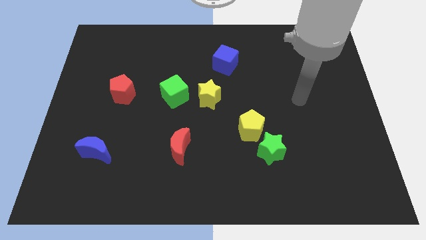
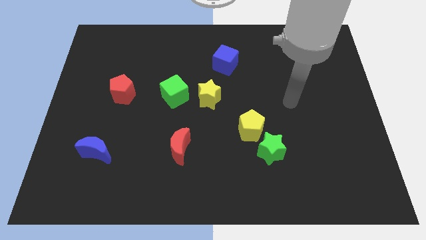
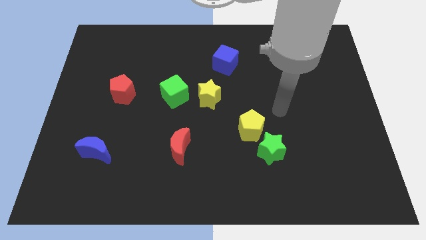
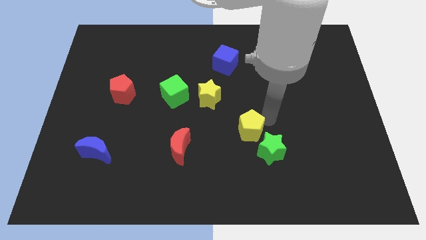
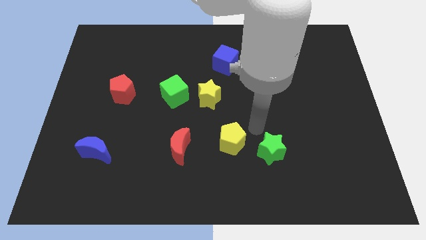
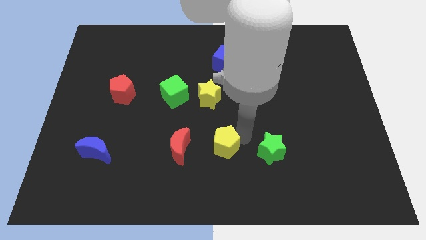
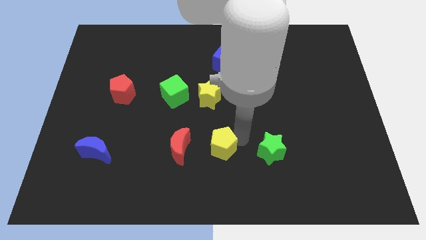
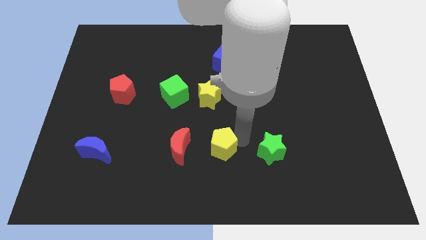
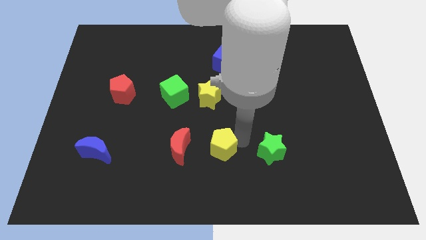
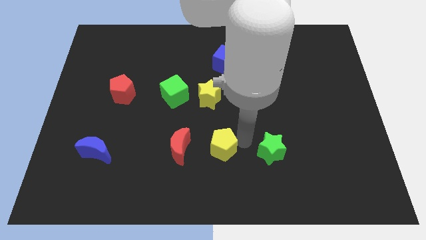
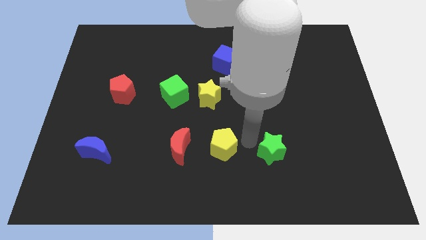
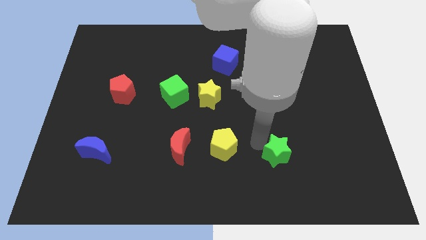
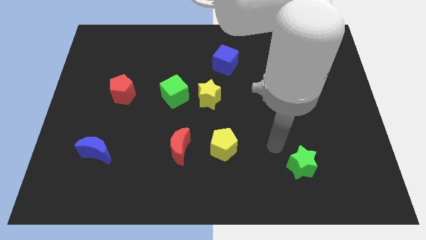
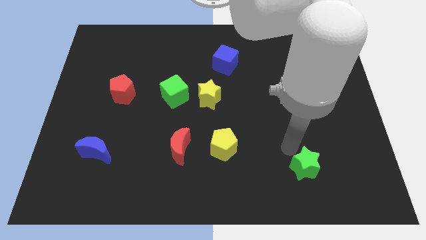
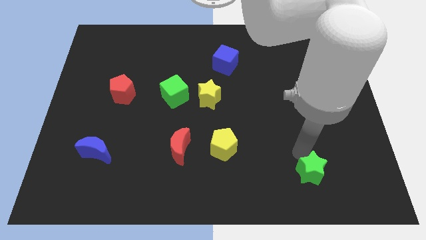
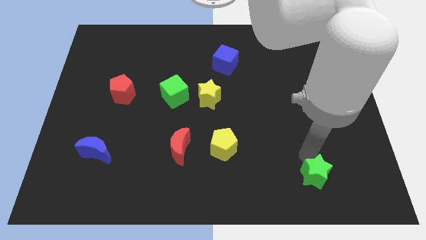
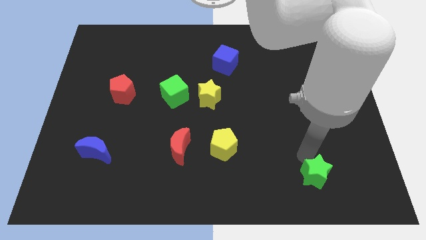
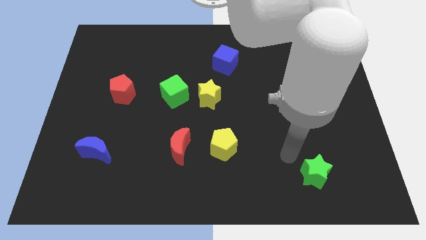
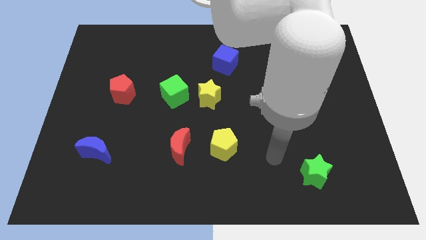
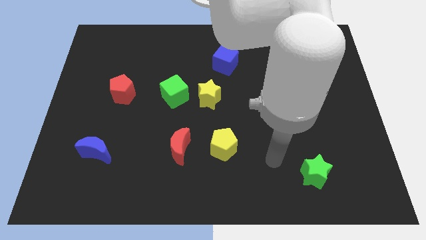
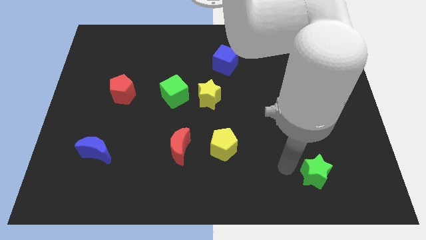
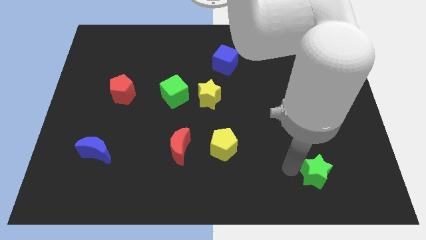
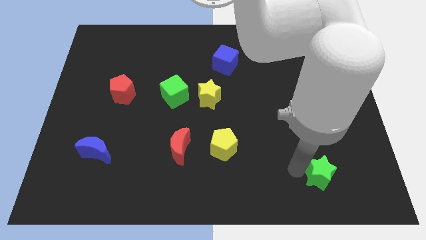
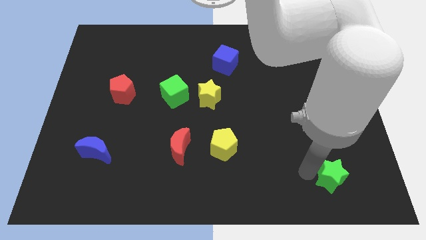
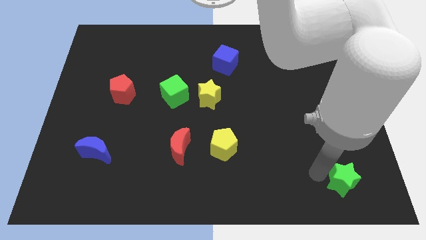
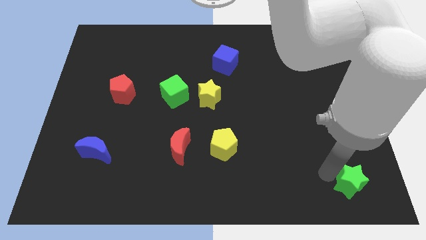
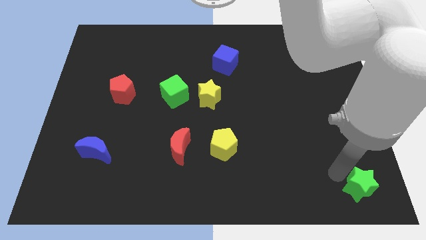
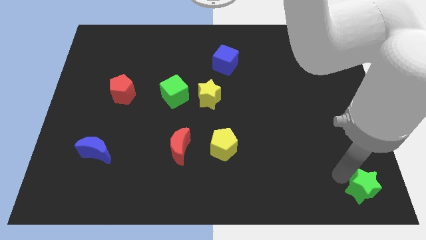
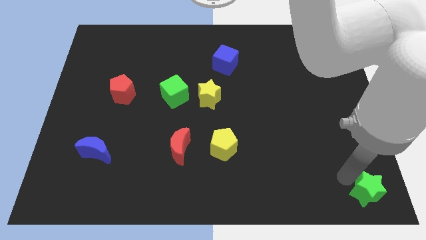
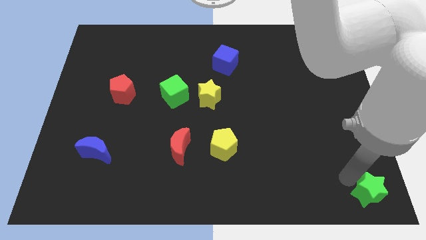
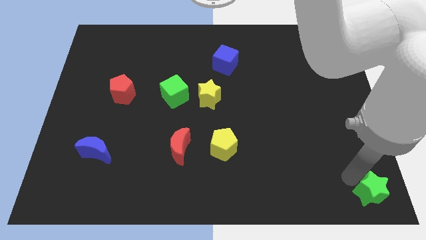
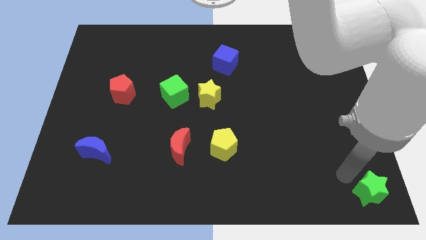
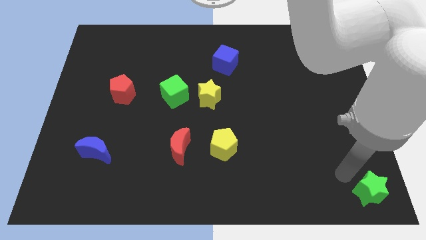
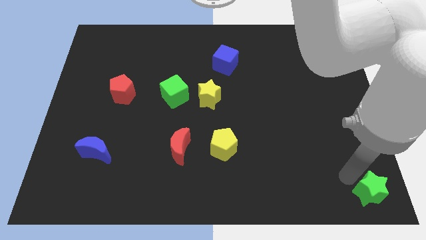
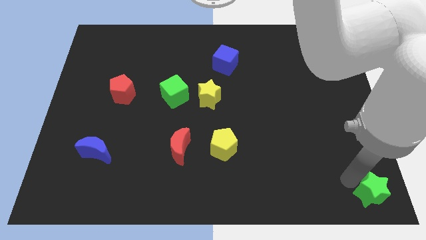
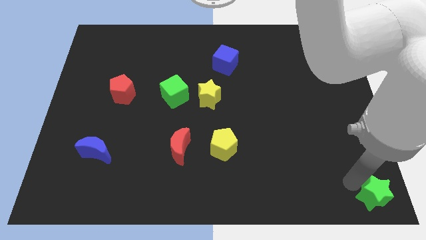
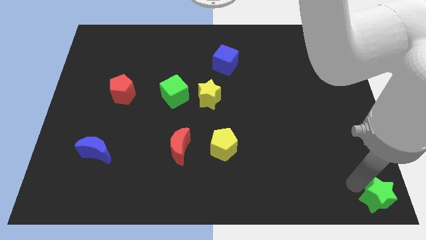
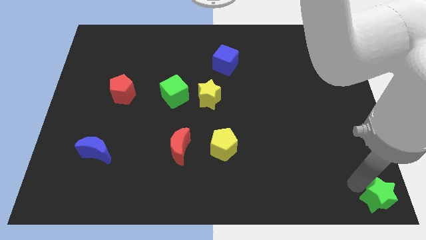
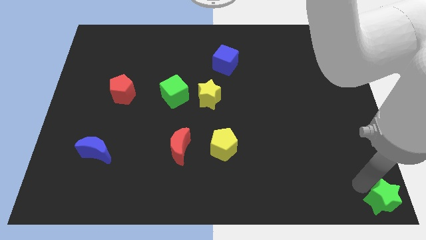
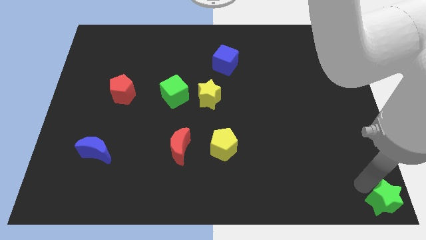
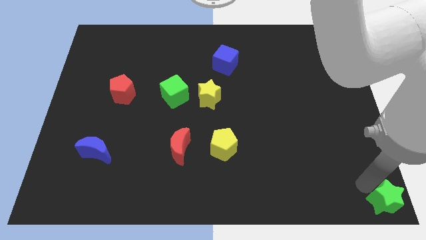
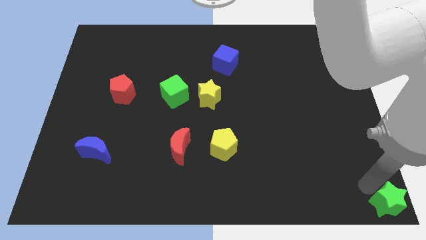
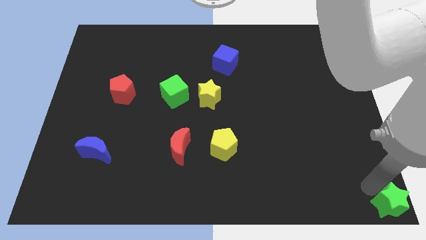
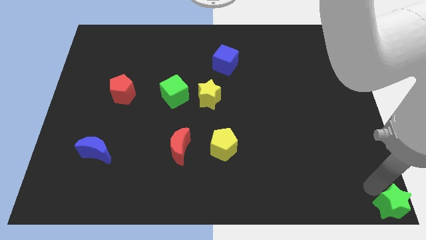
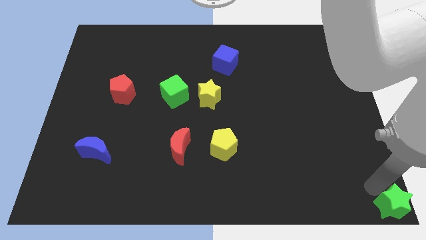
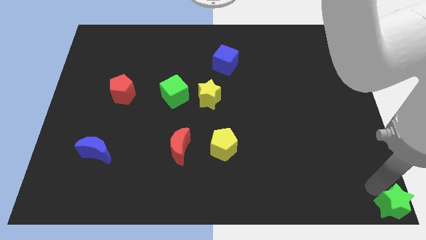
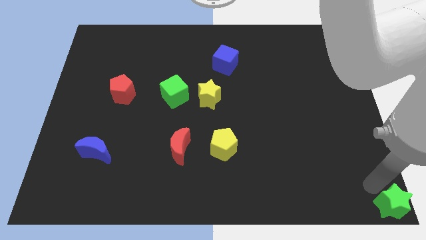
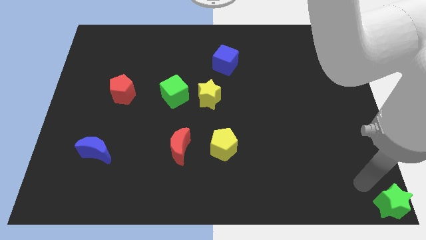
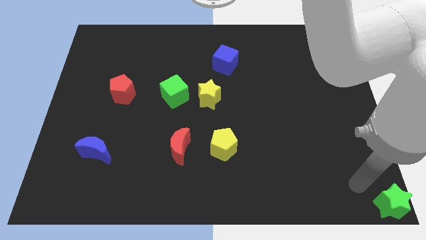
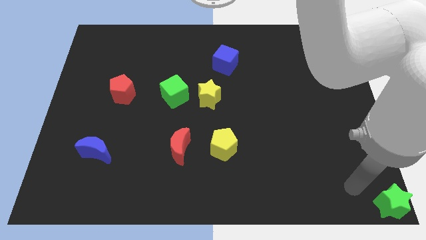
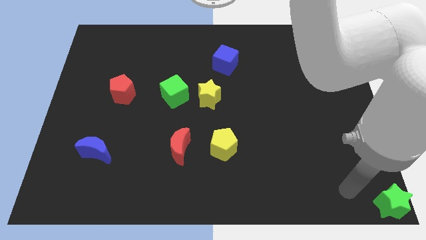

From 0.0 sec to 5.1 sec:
move the green star to the bottom right corner of the board

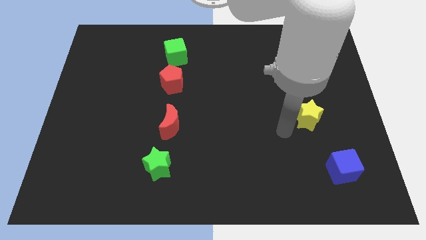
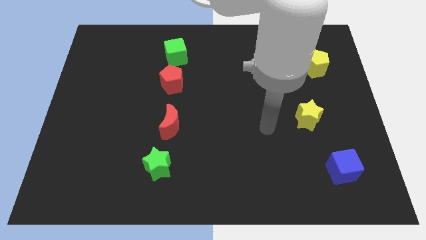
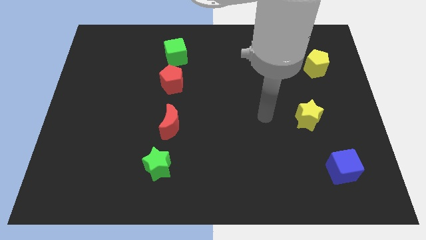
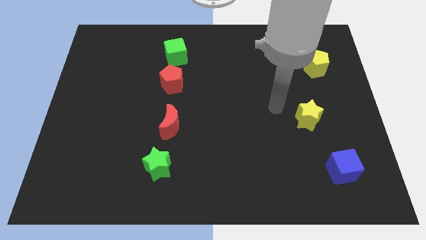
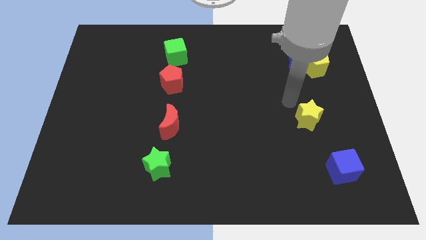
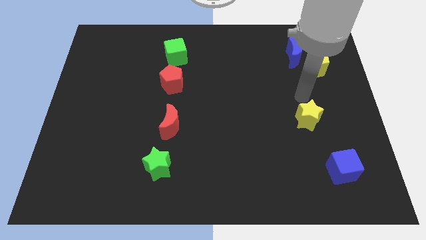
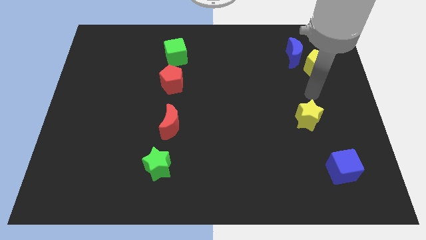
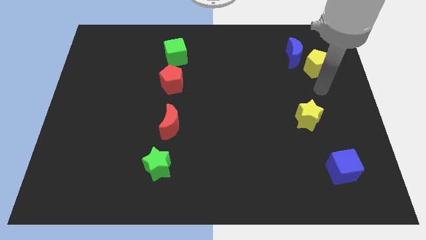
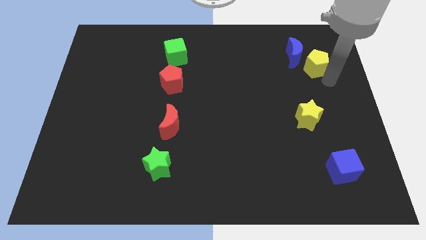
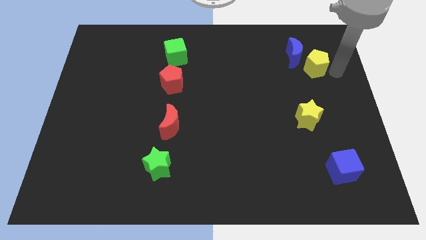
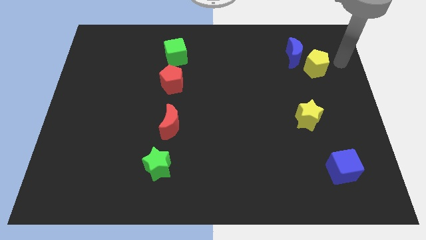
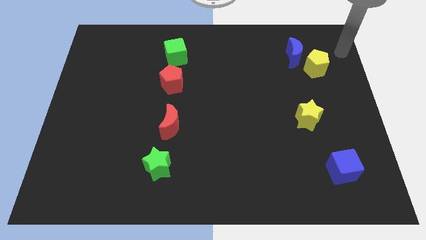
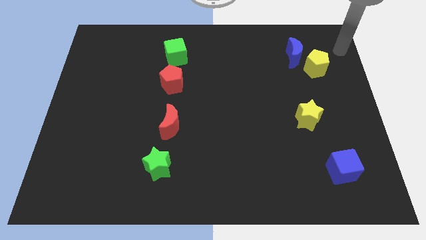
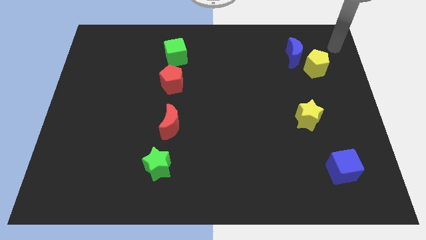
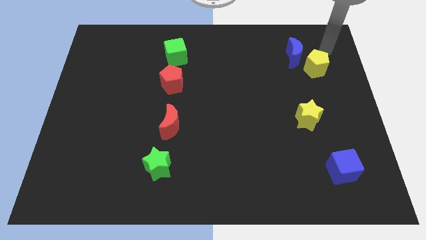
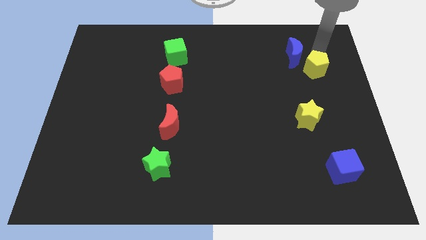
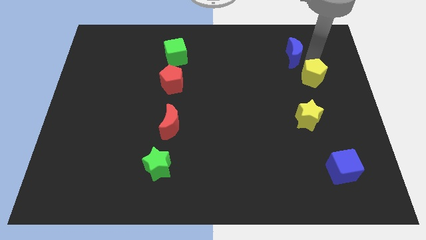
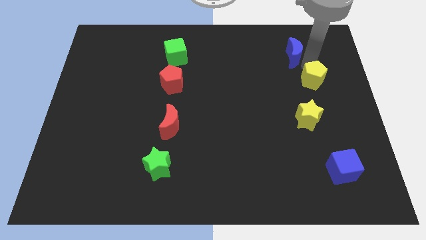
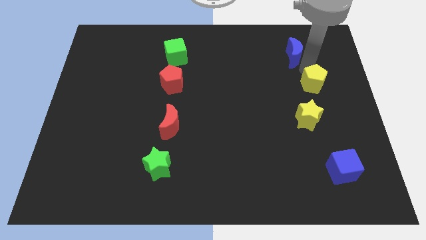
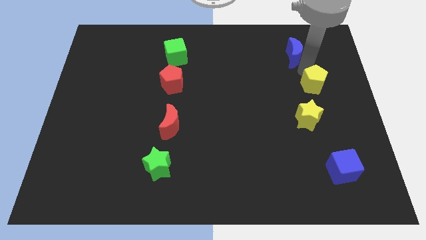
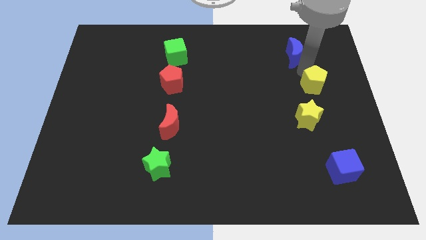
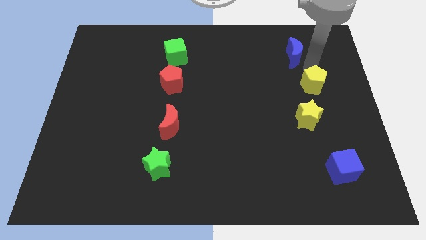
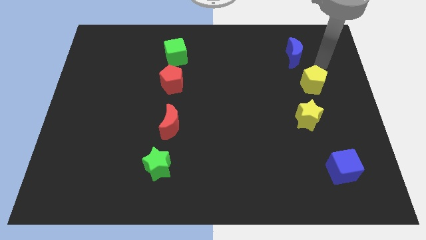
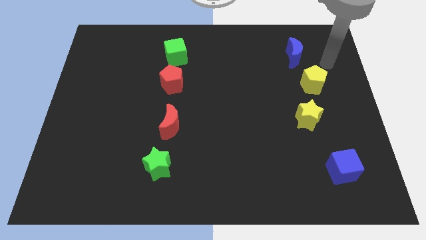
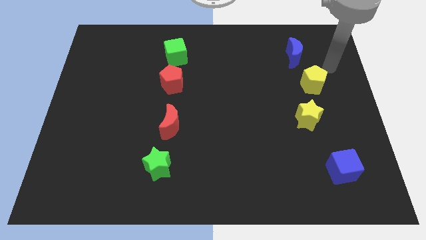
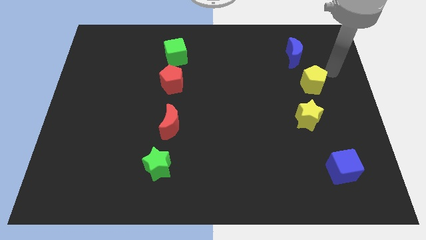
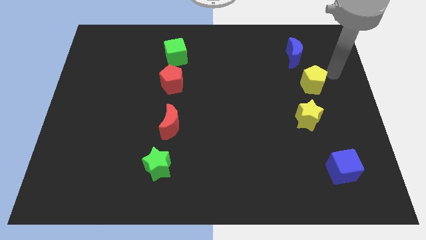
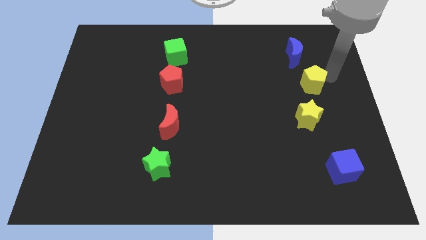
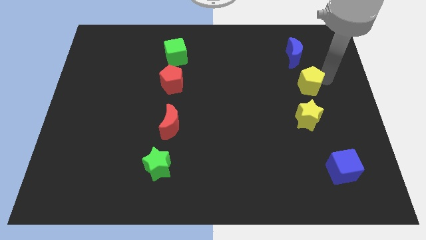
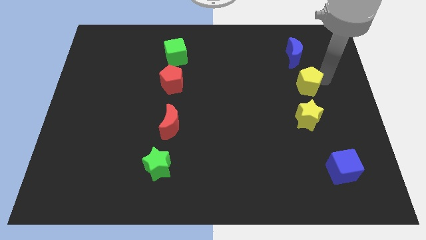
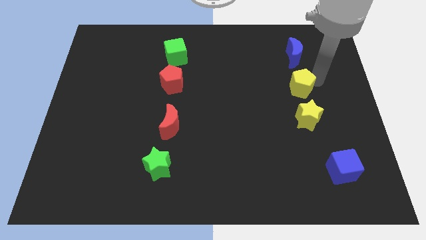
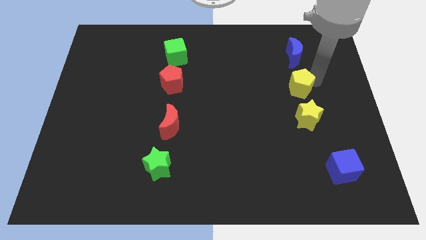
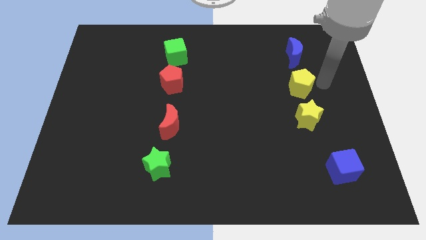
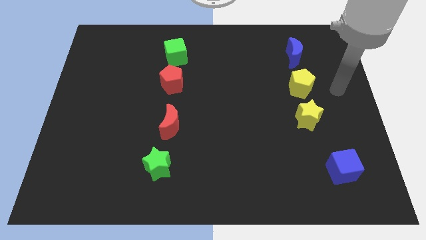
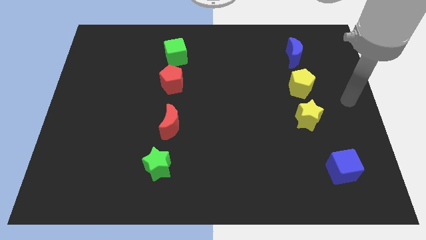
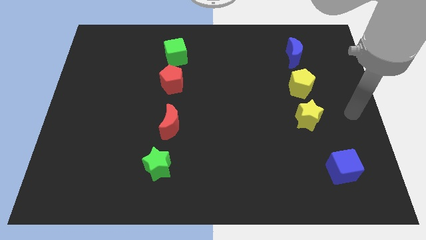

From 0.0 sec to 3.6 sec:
place the yellow pentagon in between the blue moon and the yellow star
